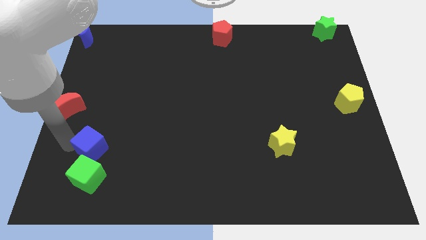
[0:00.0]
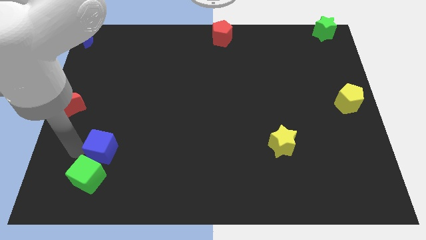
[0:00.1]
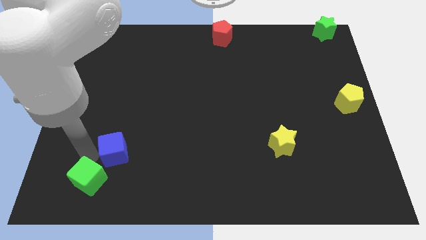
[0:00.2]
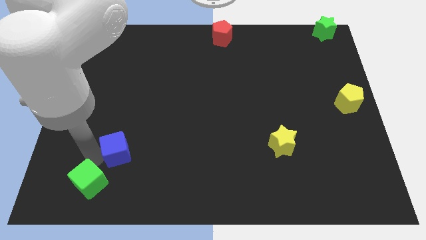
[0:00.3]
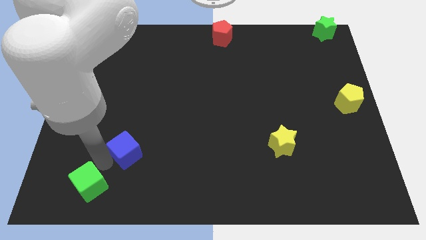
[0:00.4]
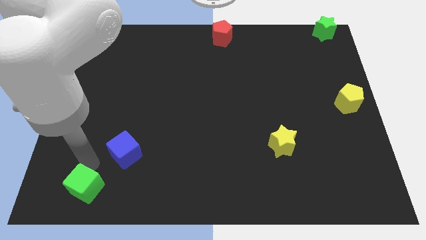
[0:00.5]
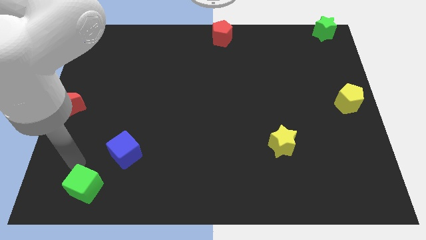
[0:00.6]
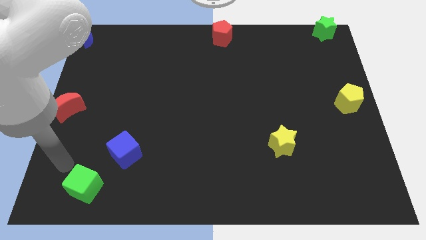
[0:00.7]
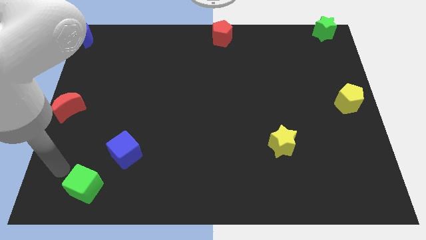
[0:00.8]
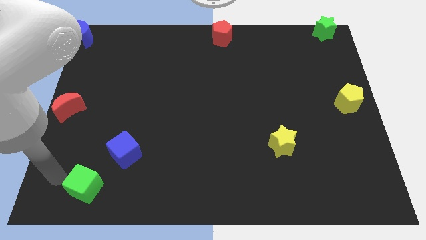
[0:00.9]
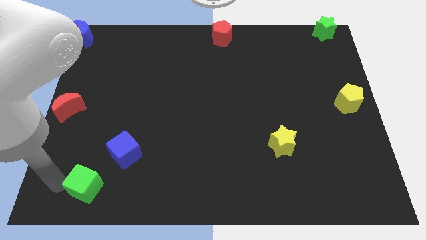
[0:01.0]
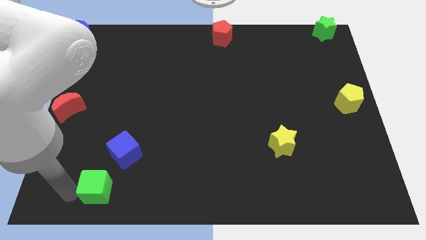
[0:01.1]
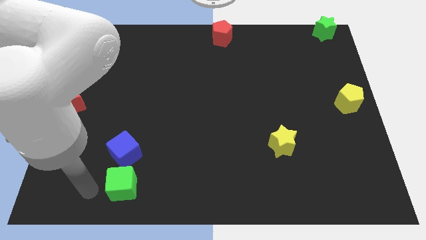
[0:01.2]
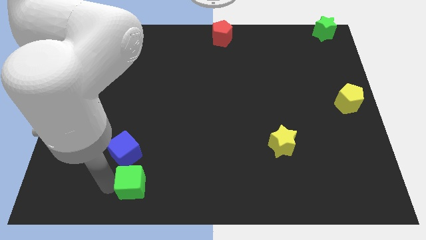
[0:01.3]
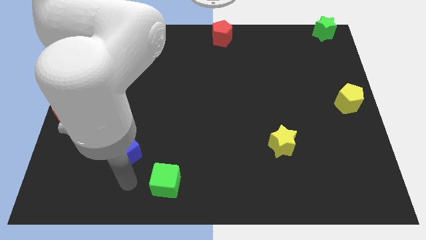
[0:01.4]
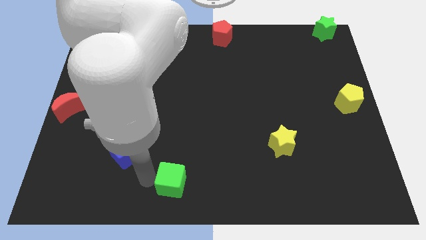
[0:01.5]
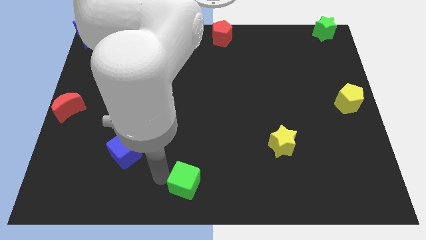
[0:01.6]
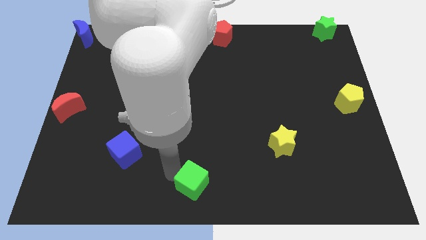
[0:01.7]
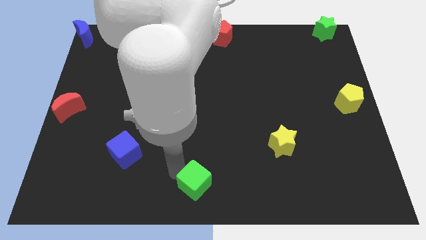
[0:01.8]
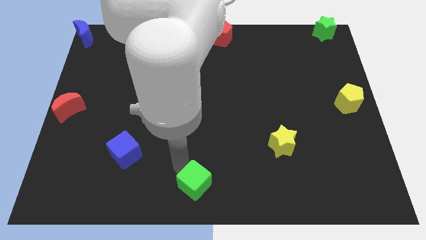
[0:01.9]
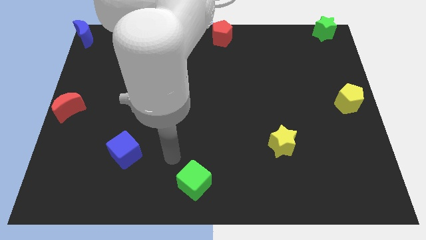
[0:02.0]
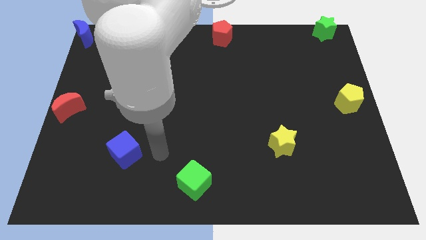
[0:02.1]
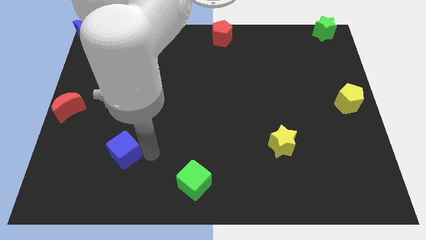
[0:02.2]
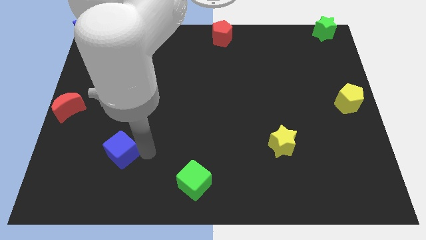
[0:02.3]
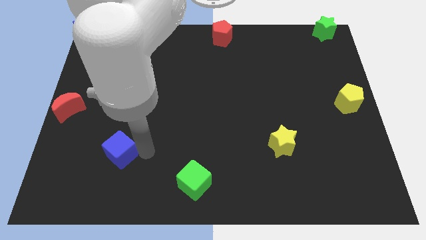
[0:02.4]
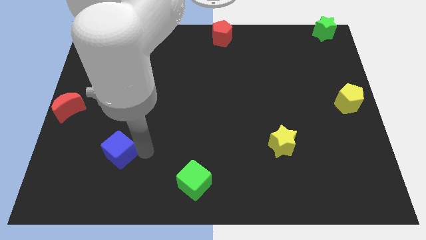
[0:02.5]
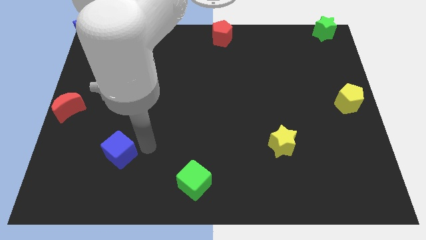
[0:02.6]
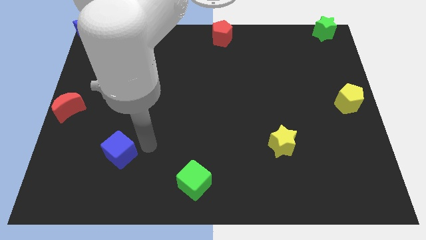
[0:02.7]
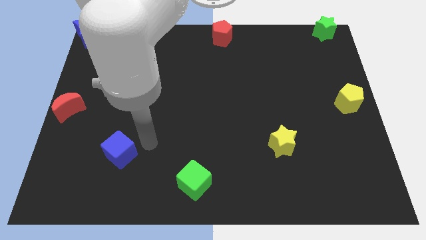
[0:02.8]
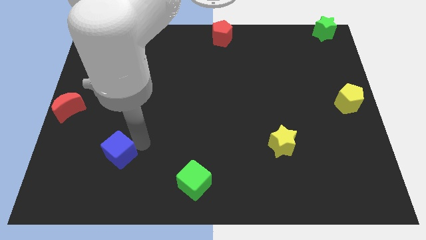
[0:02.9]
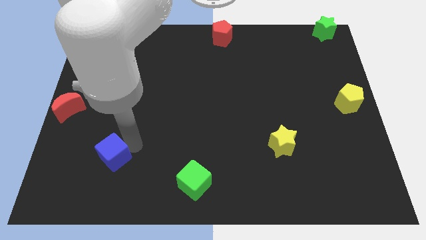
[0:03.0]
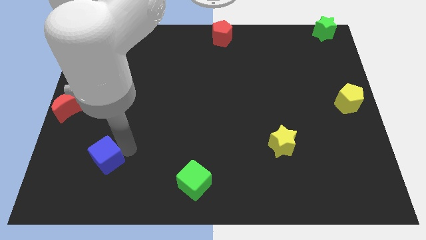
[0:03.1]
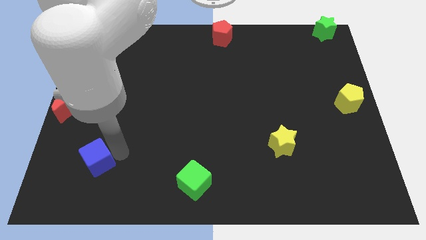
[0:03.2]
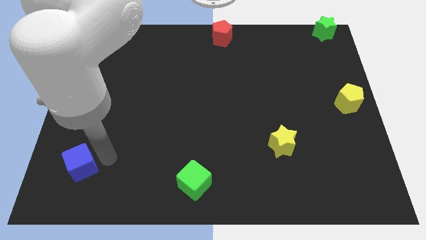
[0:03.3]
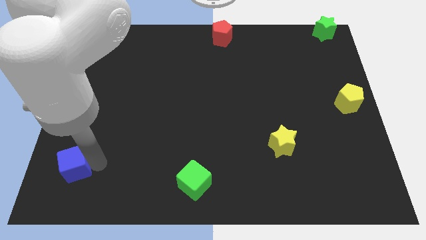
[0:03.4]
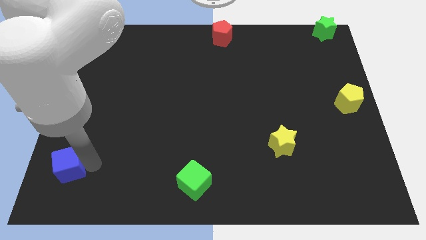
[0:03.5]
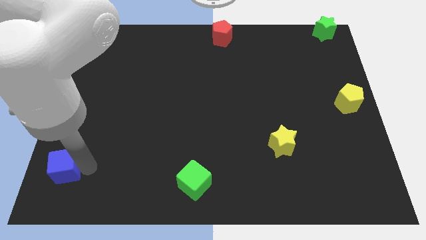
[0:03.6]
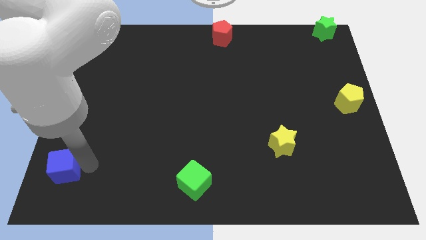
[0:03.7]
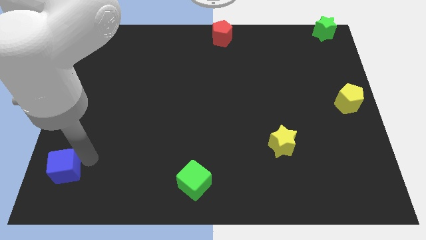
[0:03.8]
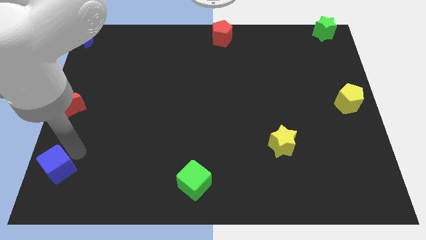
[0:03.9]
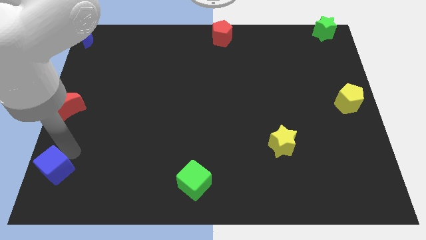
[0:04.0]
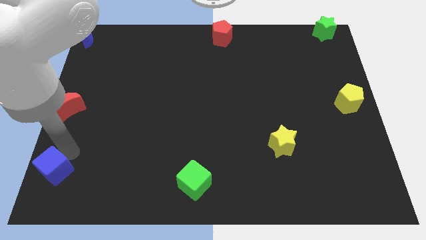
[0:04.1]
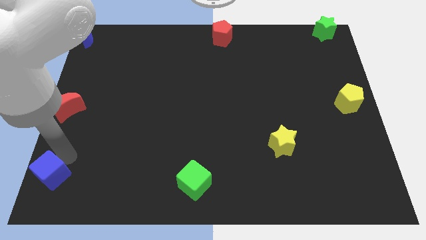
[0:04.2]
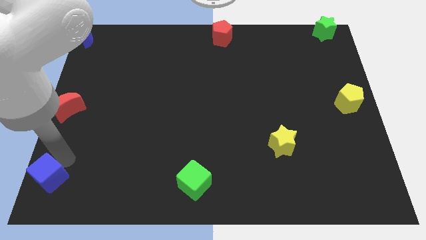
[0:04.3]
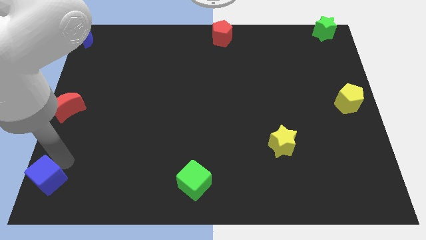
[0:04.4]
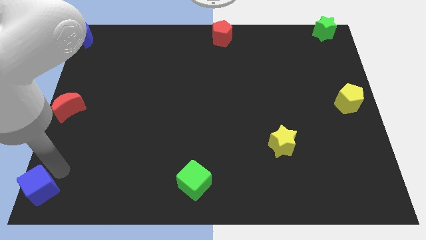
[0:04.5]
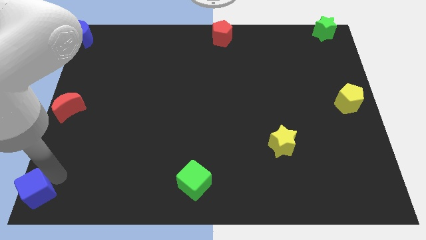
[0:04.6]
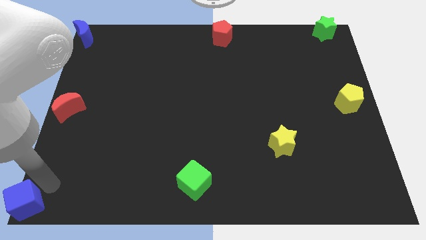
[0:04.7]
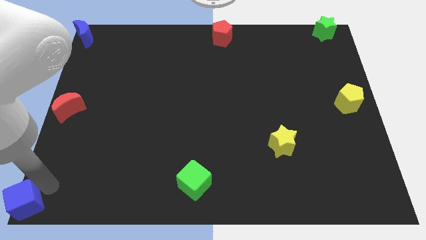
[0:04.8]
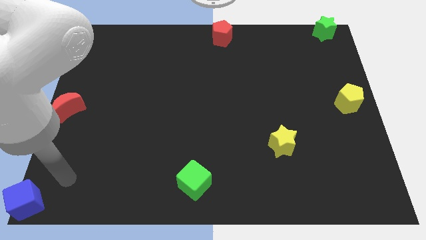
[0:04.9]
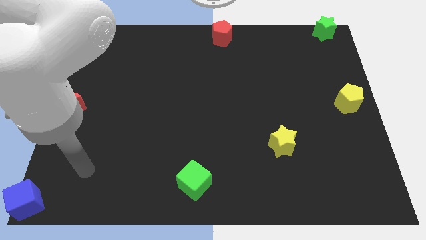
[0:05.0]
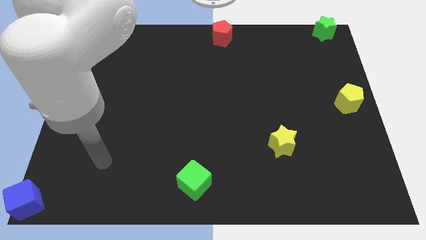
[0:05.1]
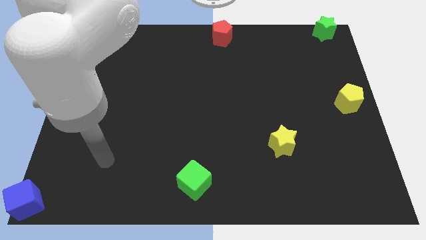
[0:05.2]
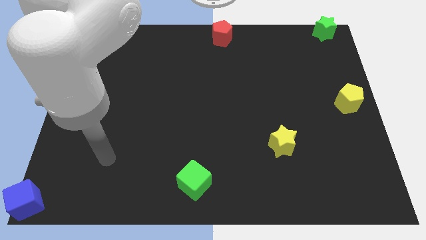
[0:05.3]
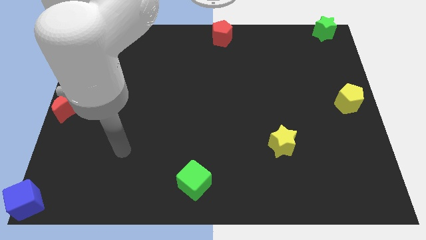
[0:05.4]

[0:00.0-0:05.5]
place the green cube to the bottom center of the board

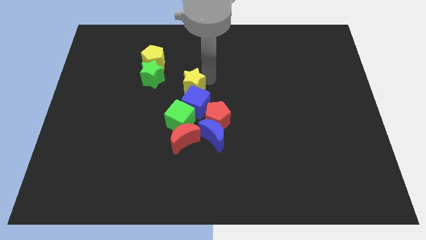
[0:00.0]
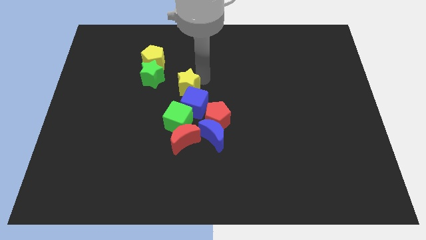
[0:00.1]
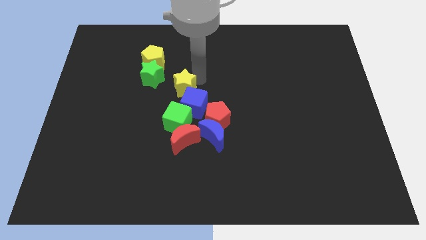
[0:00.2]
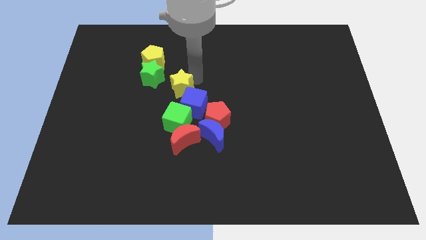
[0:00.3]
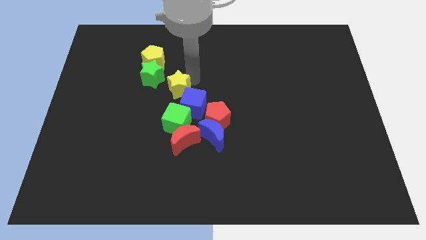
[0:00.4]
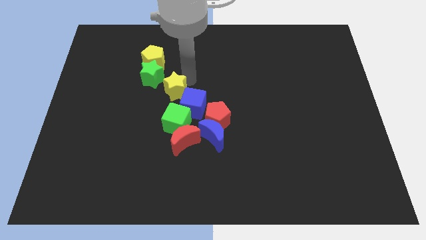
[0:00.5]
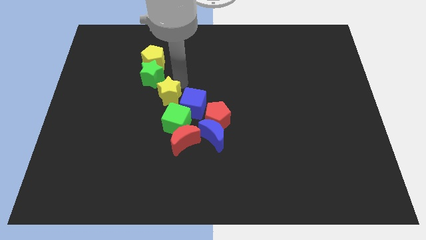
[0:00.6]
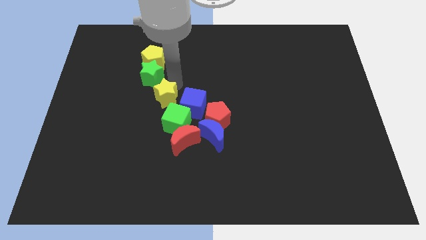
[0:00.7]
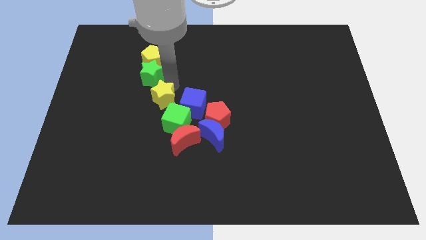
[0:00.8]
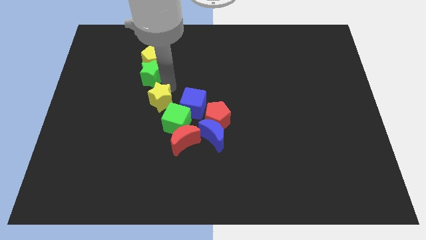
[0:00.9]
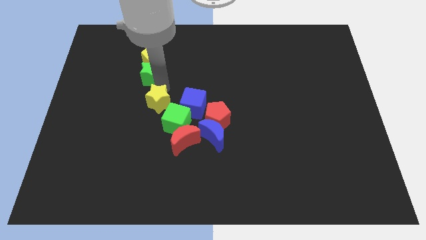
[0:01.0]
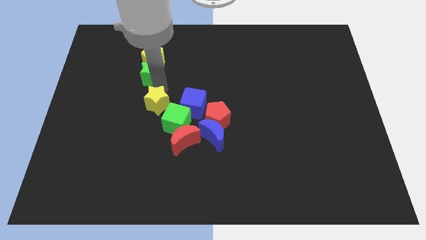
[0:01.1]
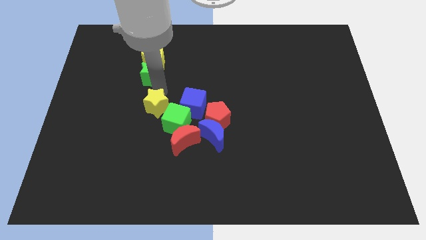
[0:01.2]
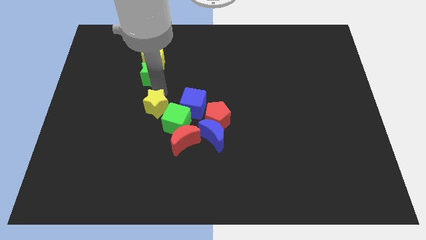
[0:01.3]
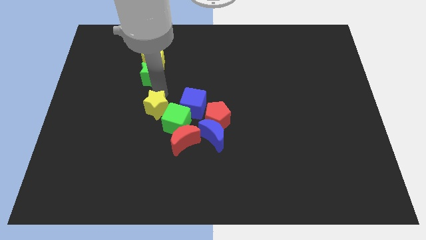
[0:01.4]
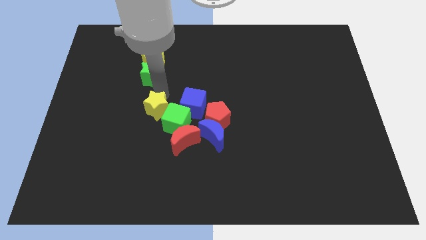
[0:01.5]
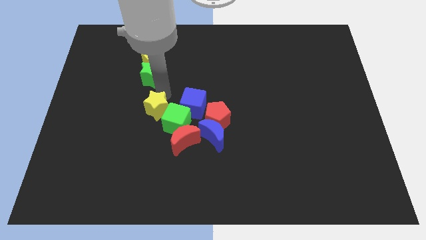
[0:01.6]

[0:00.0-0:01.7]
separate yellow star from blue cube

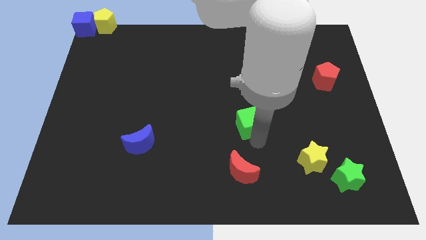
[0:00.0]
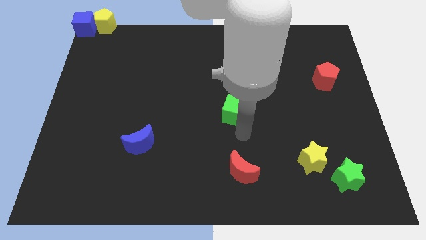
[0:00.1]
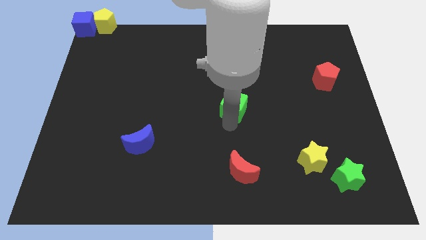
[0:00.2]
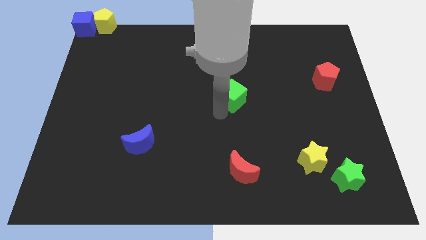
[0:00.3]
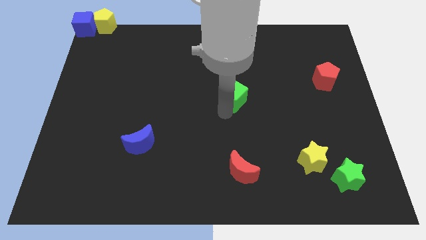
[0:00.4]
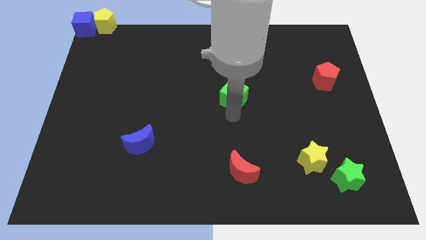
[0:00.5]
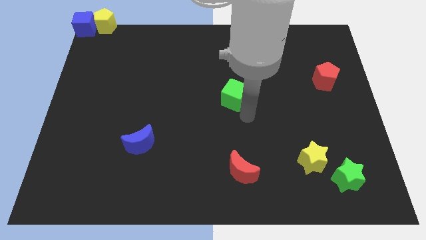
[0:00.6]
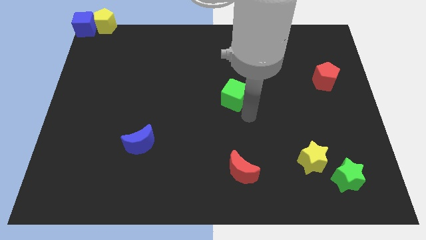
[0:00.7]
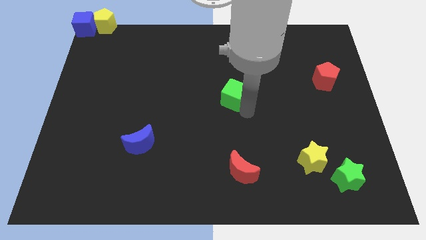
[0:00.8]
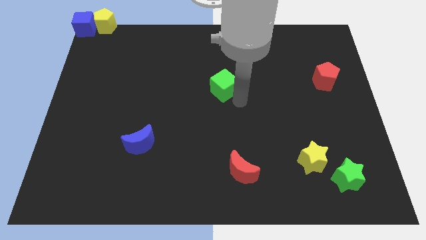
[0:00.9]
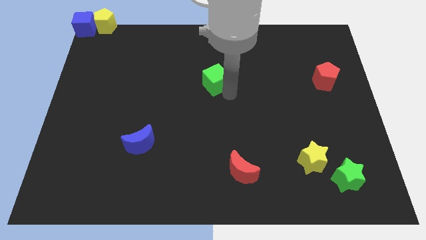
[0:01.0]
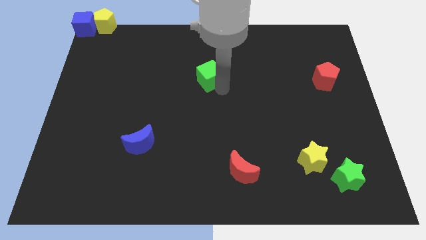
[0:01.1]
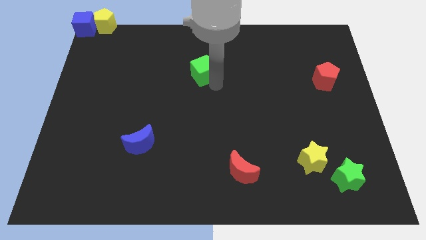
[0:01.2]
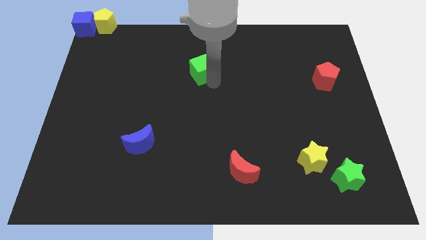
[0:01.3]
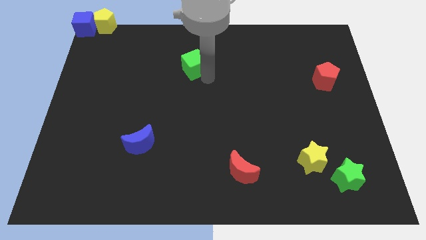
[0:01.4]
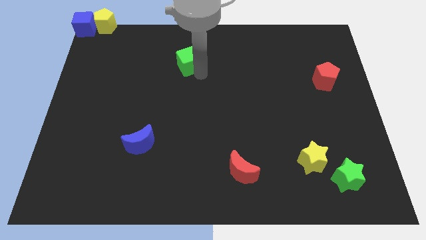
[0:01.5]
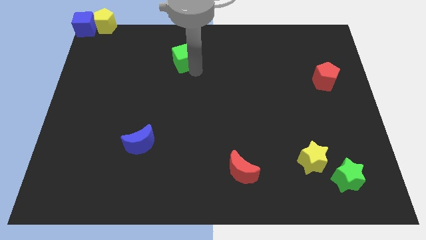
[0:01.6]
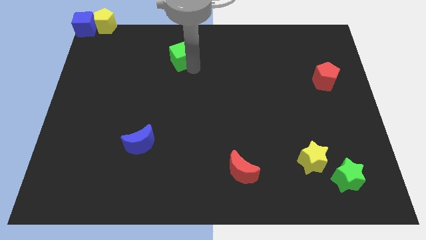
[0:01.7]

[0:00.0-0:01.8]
move the green cube to the top side of the board

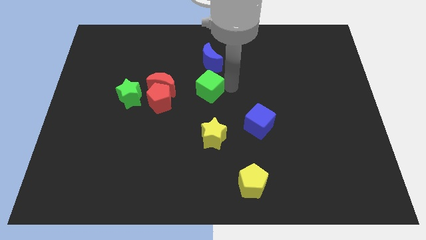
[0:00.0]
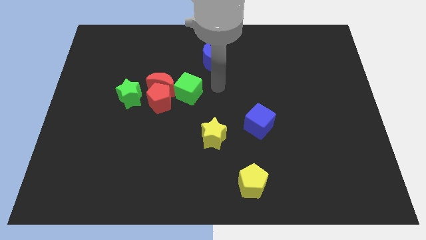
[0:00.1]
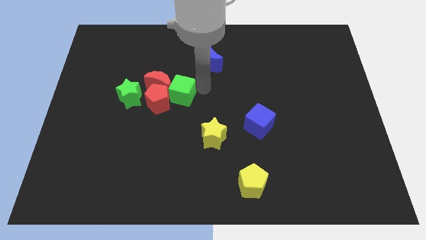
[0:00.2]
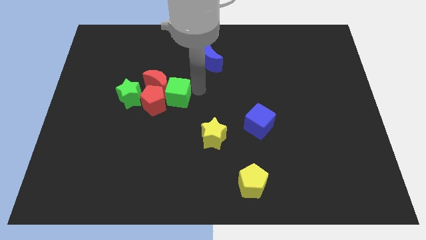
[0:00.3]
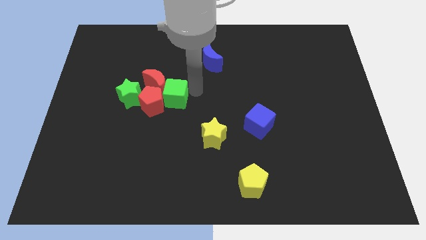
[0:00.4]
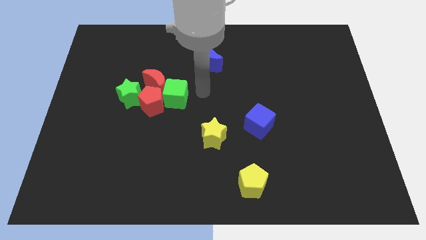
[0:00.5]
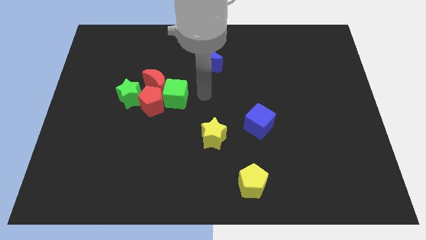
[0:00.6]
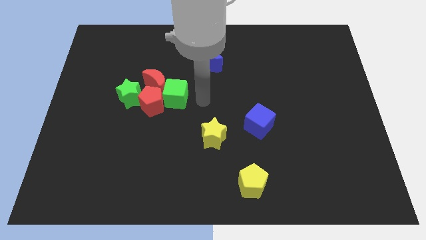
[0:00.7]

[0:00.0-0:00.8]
push the green cube to the right of the red blocks
